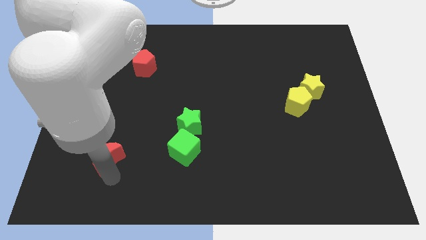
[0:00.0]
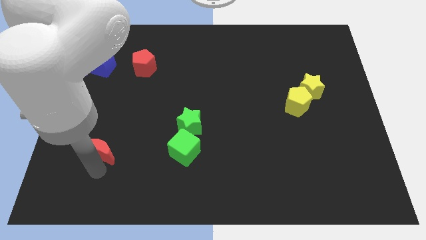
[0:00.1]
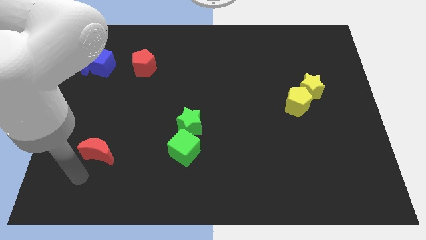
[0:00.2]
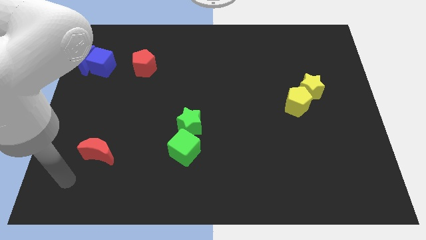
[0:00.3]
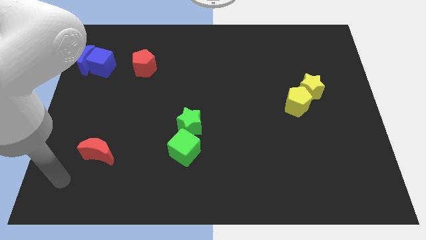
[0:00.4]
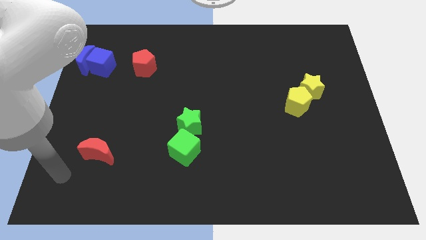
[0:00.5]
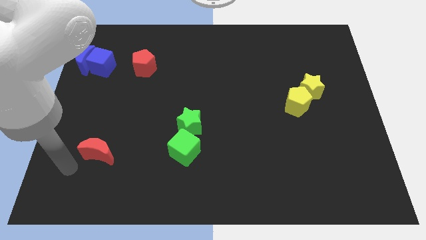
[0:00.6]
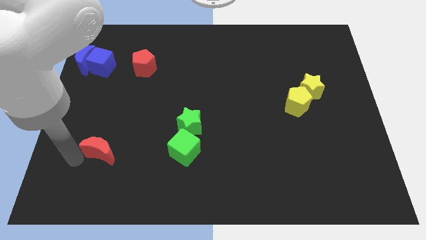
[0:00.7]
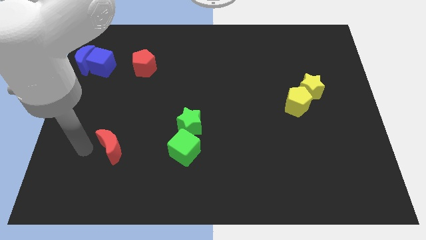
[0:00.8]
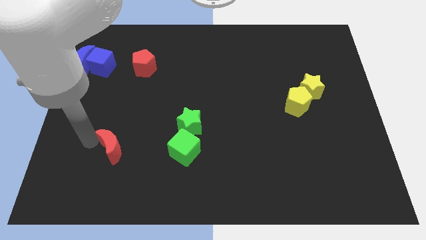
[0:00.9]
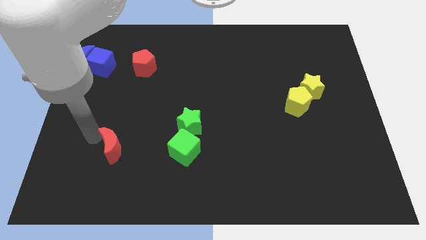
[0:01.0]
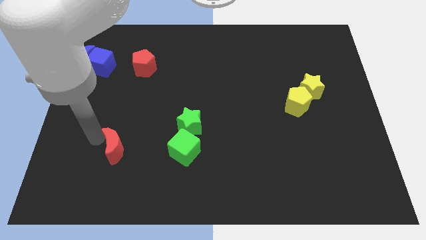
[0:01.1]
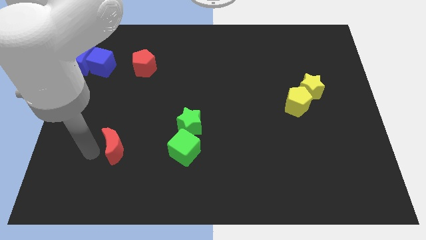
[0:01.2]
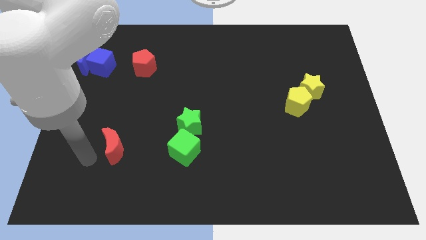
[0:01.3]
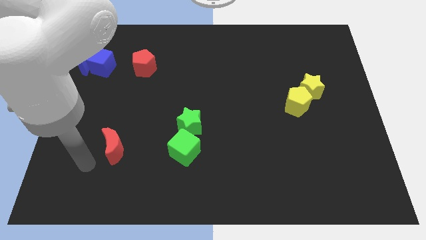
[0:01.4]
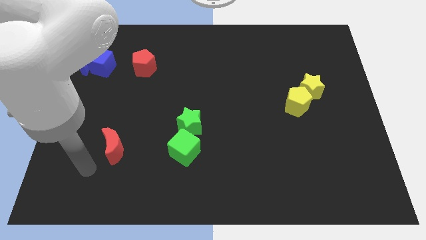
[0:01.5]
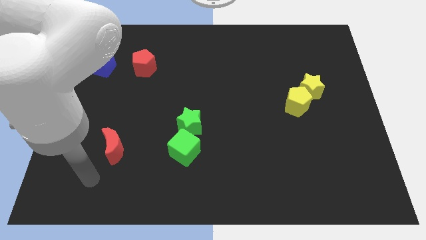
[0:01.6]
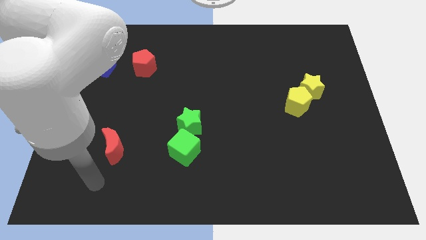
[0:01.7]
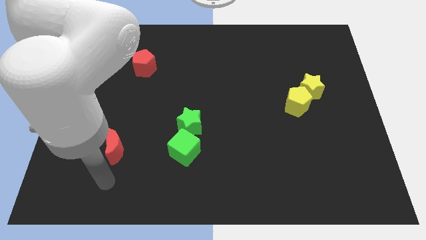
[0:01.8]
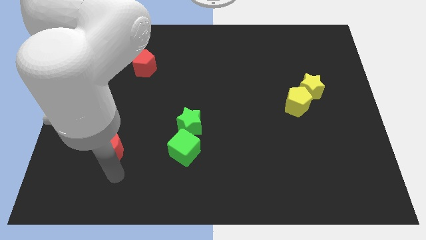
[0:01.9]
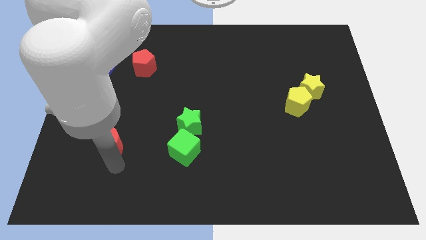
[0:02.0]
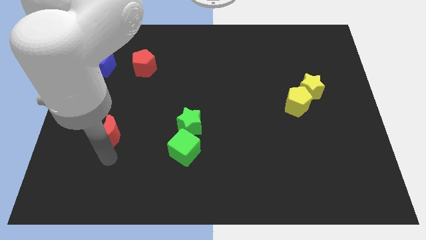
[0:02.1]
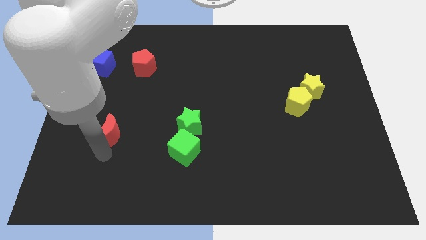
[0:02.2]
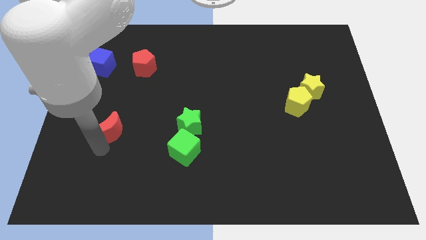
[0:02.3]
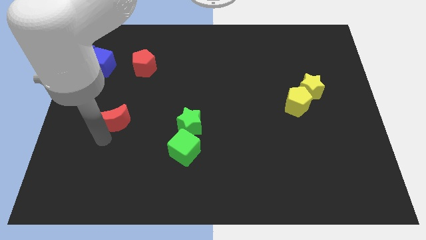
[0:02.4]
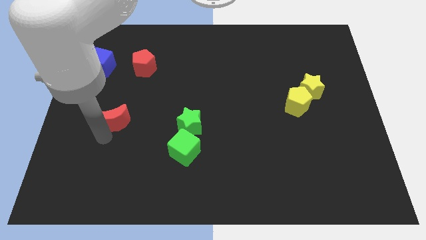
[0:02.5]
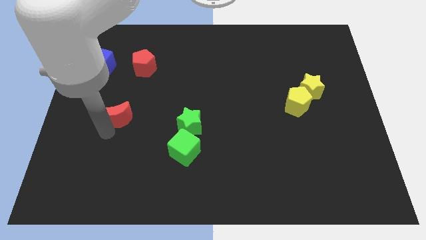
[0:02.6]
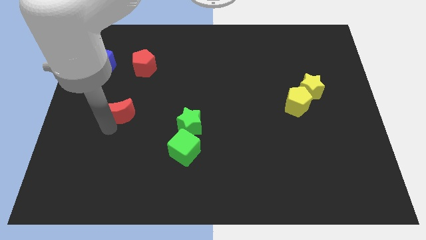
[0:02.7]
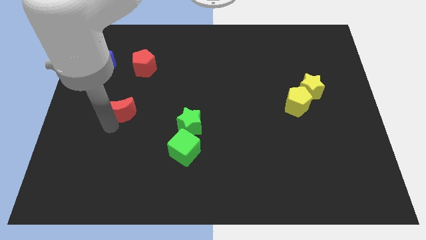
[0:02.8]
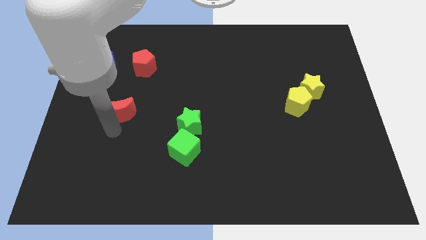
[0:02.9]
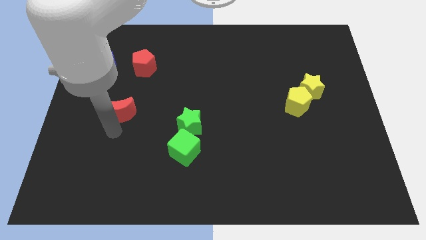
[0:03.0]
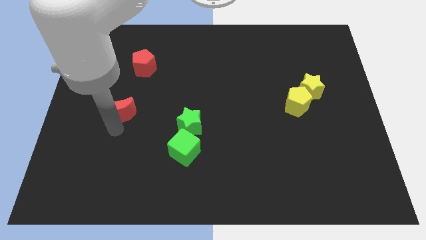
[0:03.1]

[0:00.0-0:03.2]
push the red crescent upwards

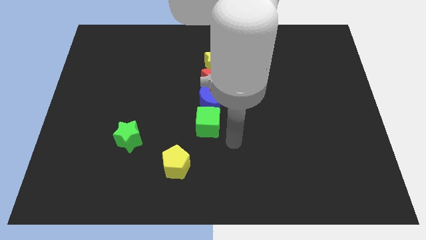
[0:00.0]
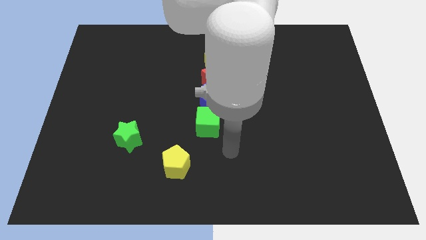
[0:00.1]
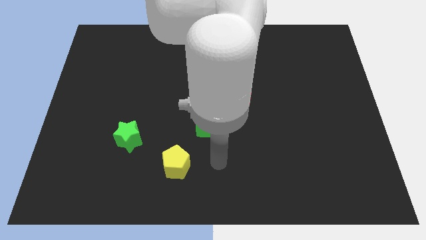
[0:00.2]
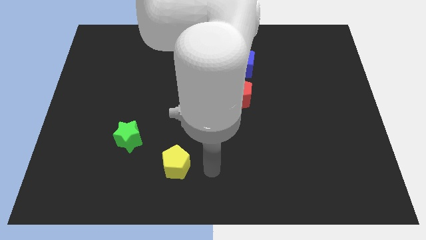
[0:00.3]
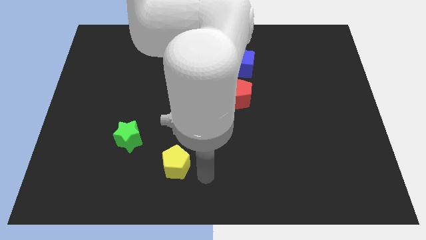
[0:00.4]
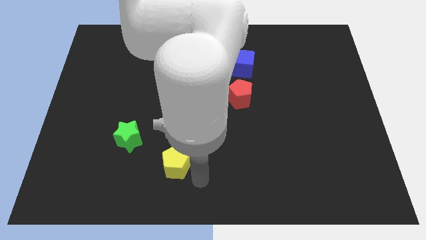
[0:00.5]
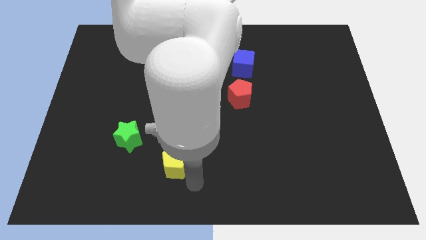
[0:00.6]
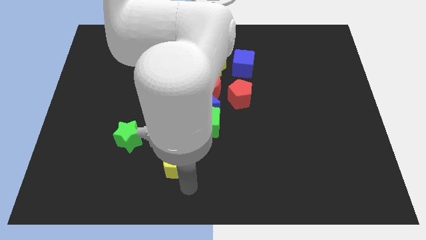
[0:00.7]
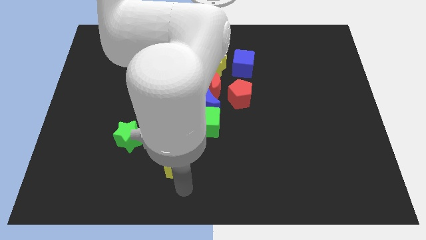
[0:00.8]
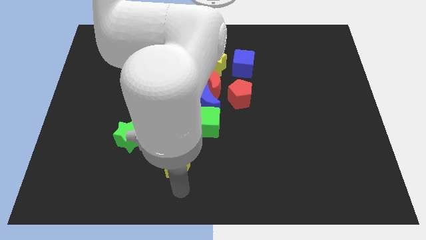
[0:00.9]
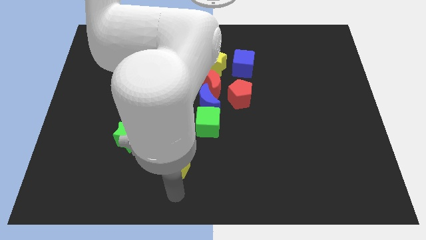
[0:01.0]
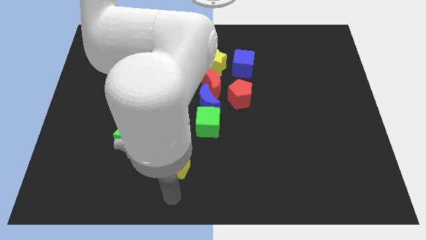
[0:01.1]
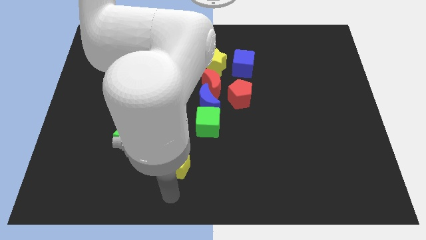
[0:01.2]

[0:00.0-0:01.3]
point your arm at the bottom of yellow pentagon

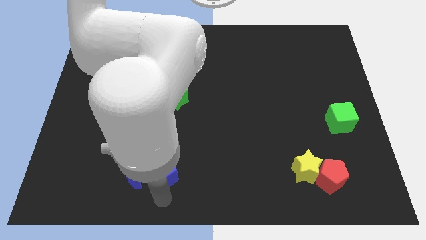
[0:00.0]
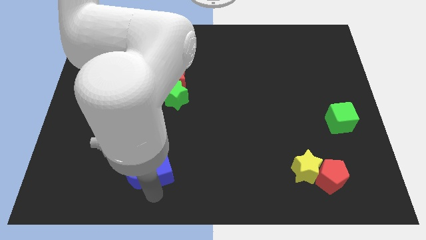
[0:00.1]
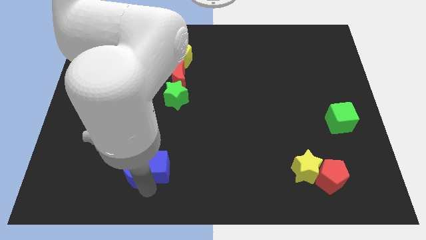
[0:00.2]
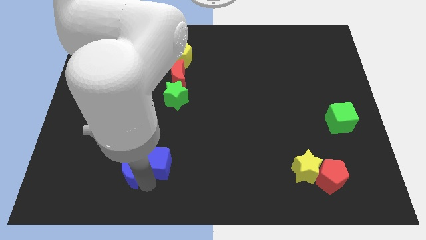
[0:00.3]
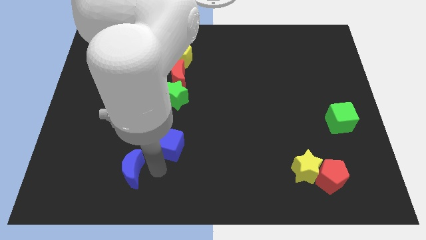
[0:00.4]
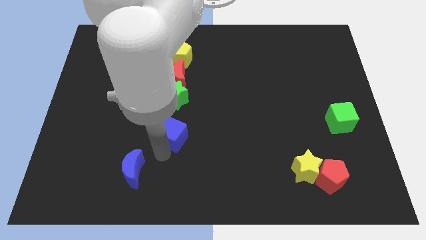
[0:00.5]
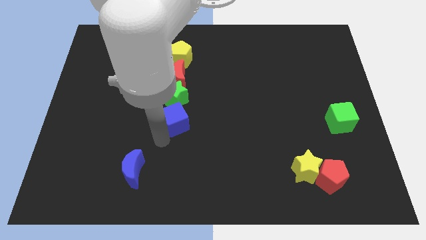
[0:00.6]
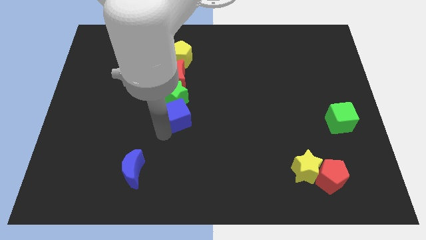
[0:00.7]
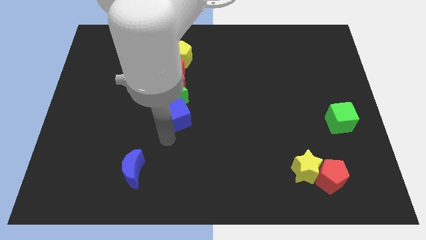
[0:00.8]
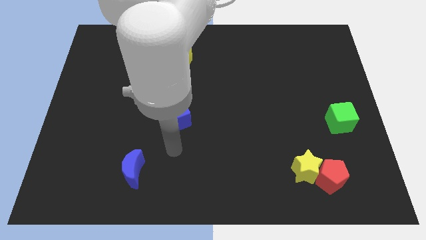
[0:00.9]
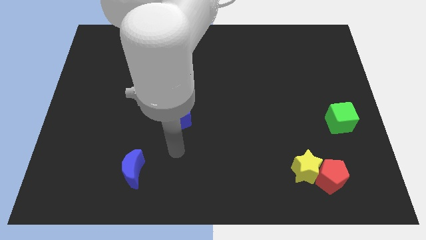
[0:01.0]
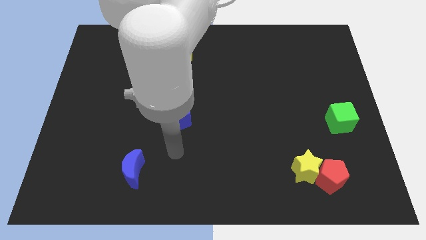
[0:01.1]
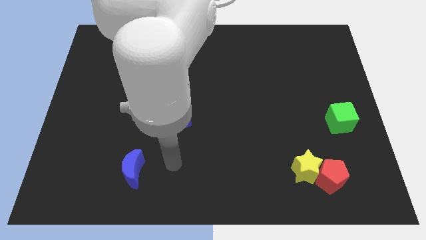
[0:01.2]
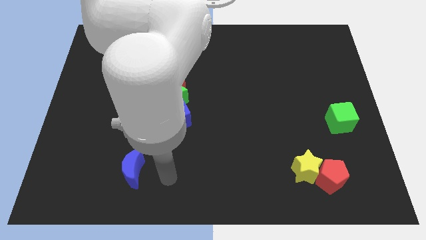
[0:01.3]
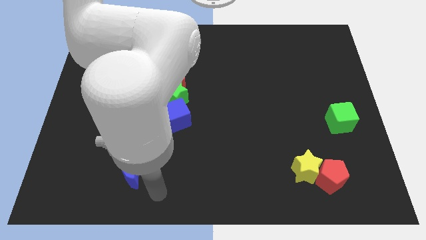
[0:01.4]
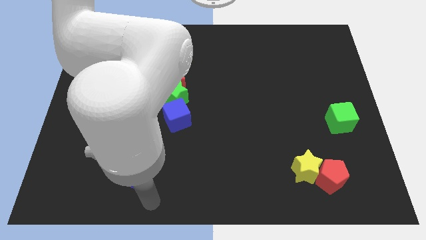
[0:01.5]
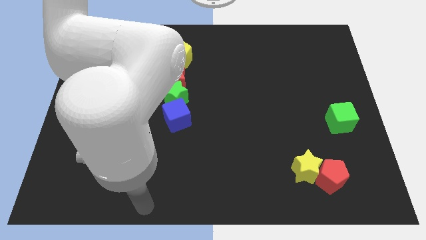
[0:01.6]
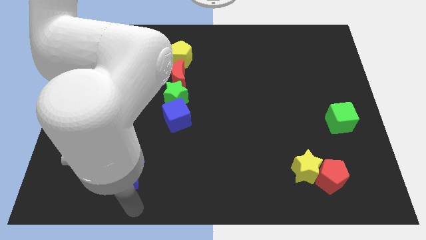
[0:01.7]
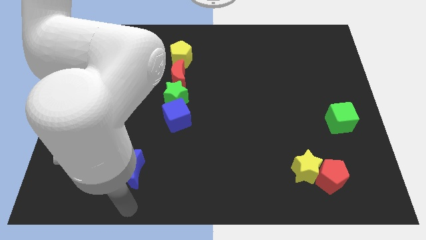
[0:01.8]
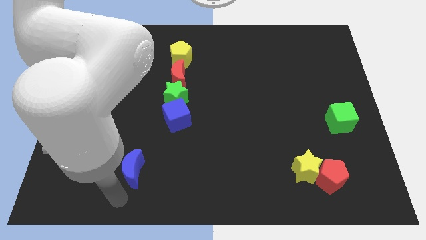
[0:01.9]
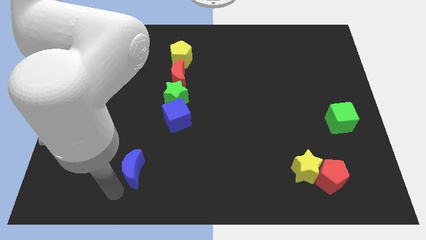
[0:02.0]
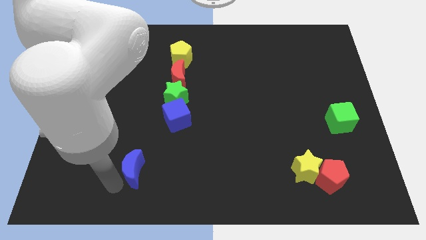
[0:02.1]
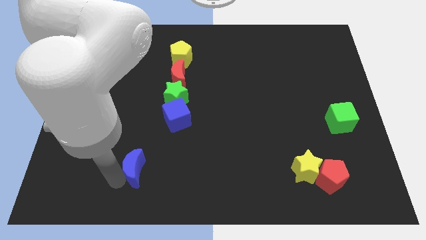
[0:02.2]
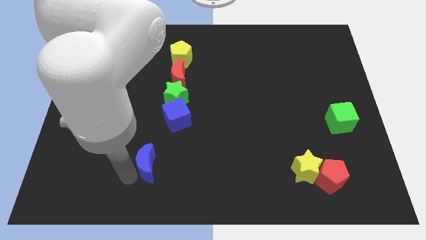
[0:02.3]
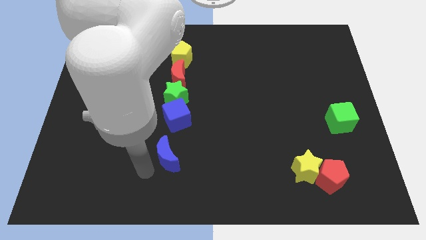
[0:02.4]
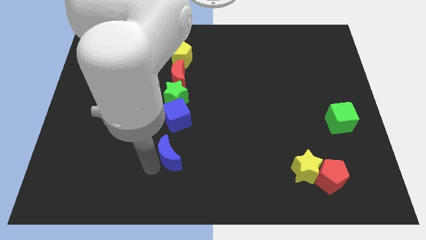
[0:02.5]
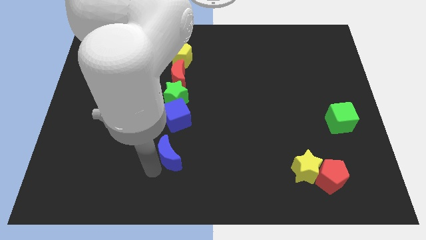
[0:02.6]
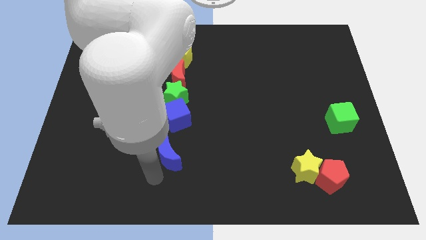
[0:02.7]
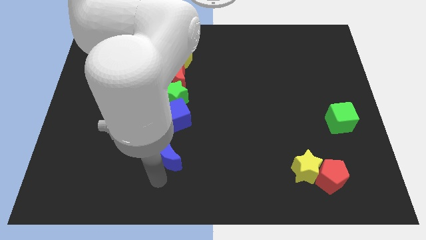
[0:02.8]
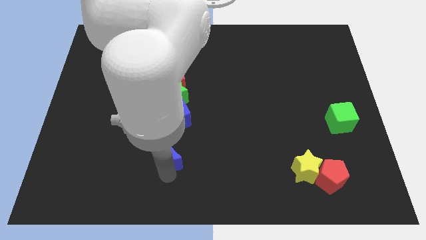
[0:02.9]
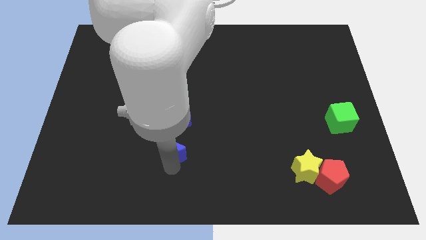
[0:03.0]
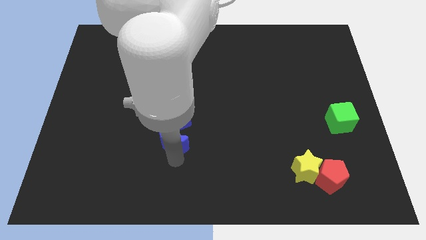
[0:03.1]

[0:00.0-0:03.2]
slide the blue cube to the bottom of the green star

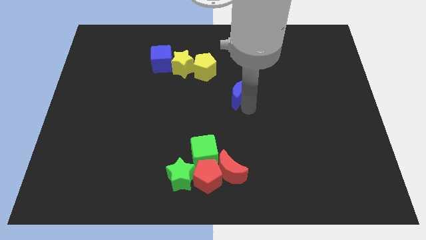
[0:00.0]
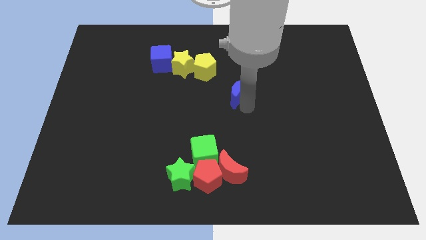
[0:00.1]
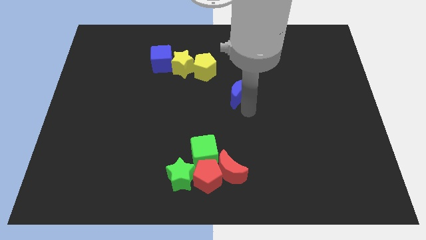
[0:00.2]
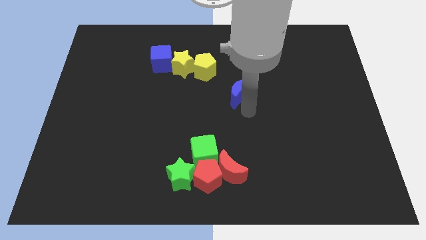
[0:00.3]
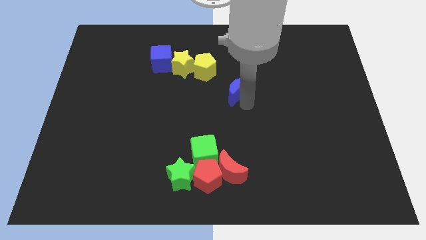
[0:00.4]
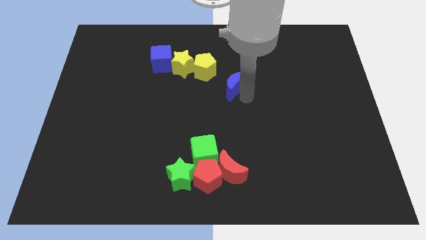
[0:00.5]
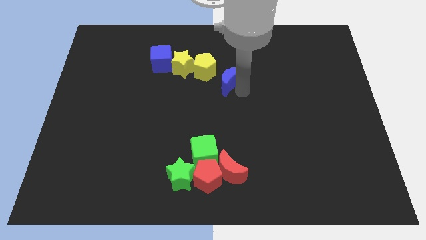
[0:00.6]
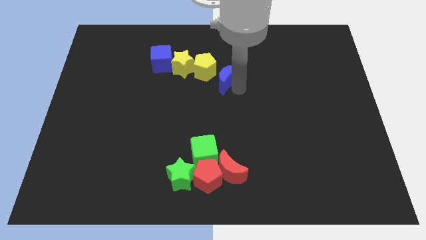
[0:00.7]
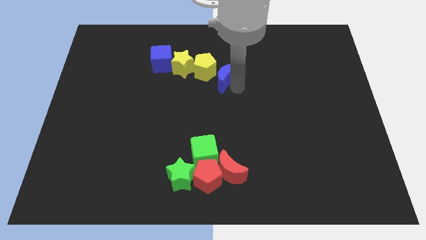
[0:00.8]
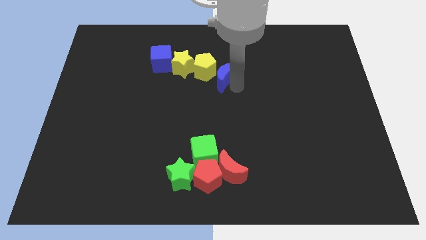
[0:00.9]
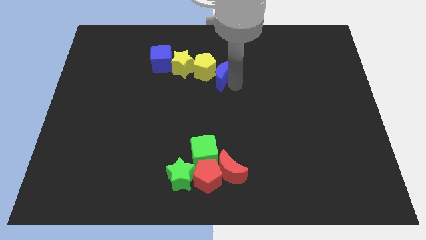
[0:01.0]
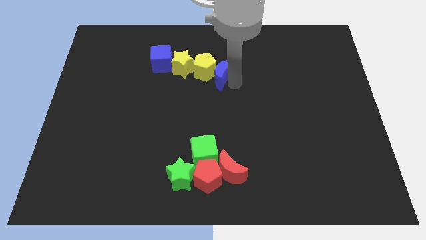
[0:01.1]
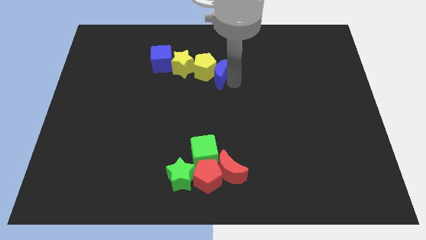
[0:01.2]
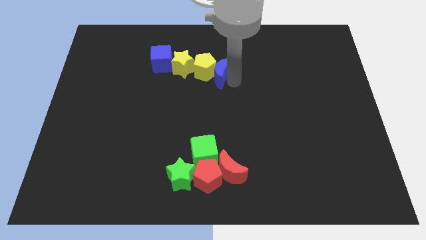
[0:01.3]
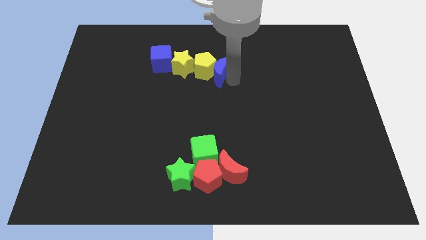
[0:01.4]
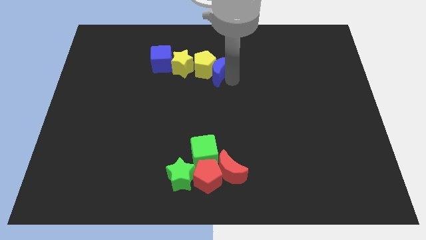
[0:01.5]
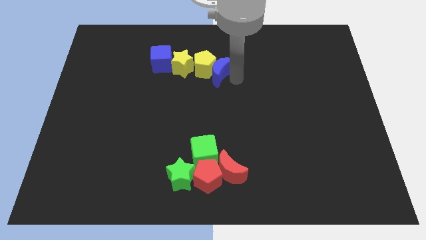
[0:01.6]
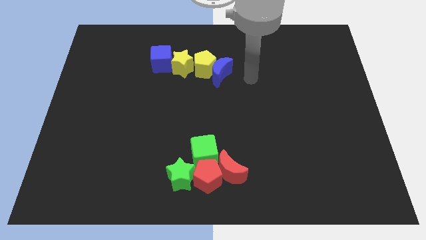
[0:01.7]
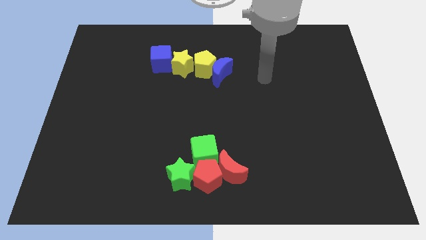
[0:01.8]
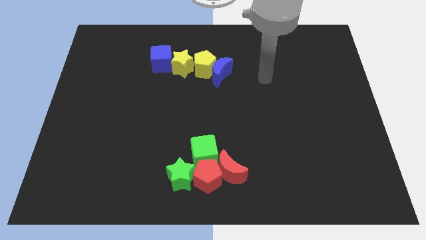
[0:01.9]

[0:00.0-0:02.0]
put the blue moon into the yellow pentagon
